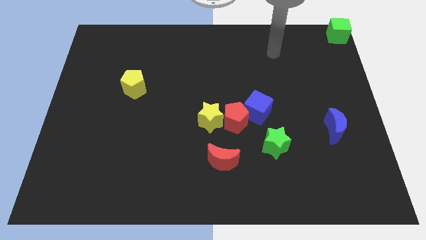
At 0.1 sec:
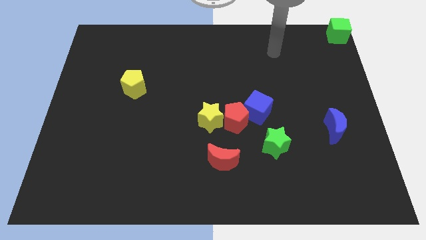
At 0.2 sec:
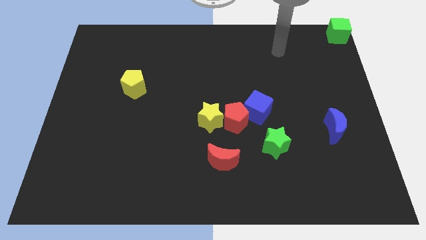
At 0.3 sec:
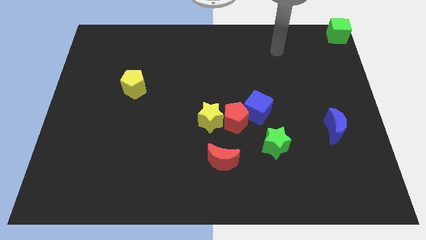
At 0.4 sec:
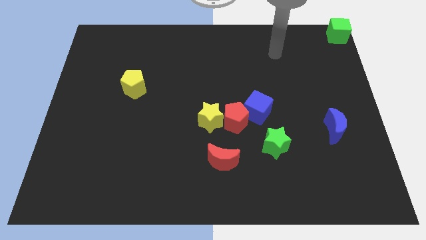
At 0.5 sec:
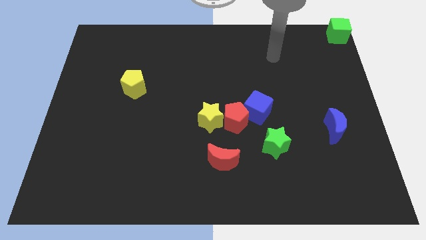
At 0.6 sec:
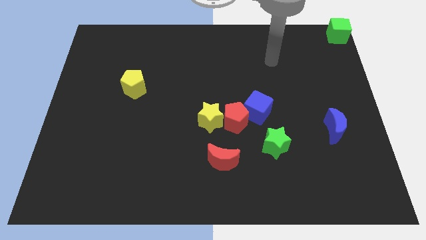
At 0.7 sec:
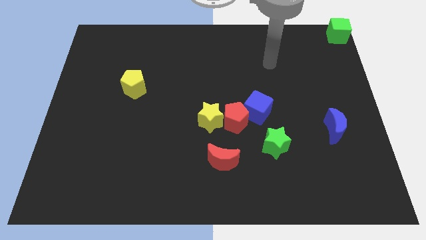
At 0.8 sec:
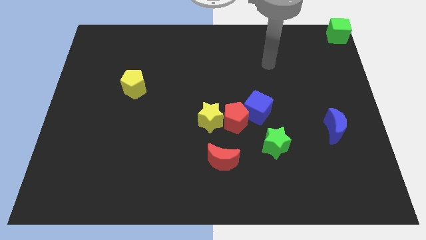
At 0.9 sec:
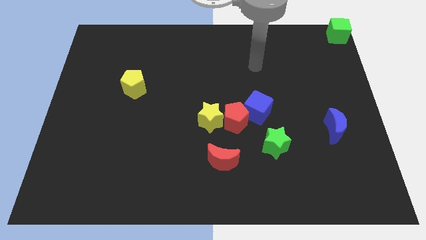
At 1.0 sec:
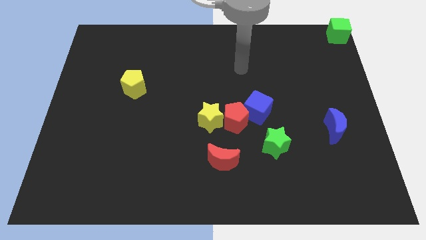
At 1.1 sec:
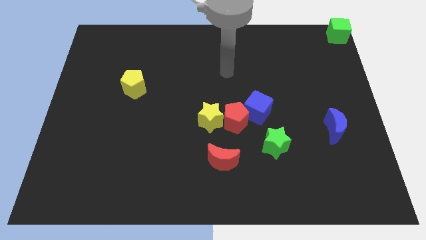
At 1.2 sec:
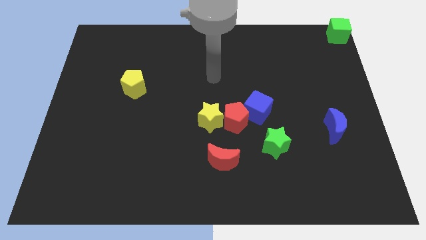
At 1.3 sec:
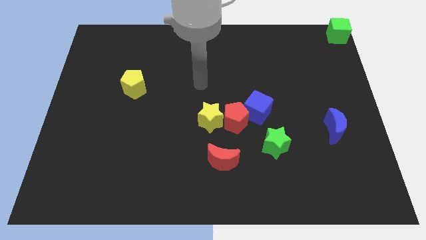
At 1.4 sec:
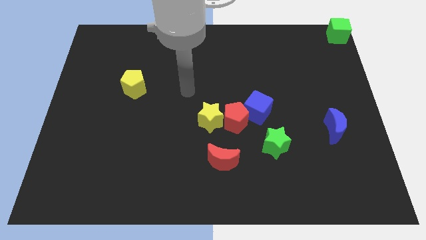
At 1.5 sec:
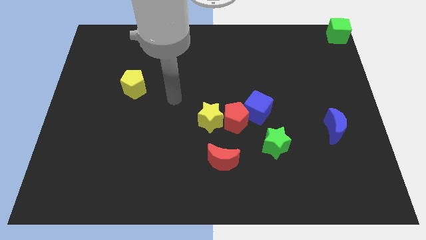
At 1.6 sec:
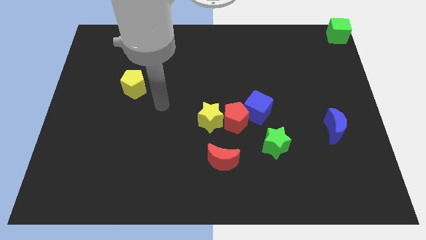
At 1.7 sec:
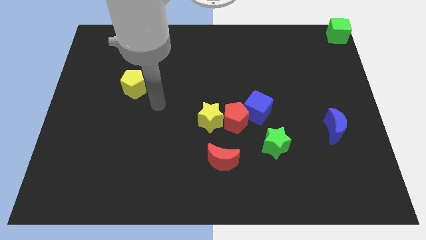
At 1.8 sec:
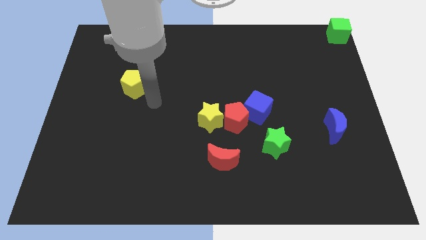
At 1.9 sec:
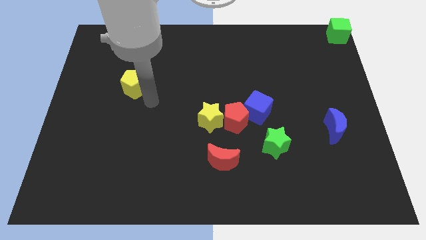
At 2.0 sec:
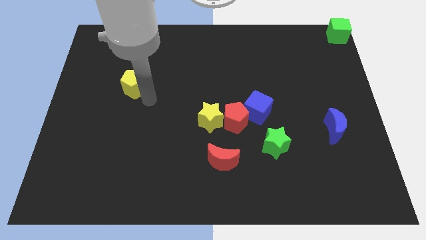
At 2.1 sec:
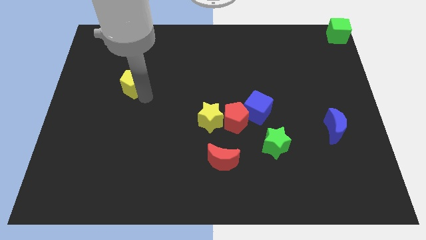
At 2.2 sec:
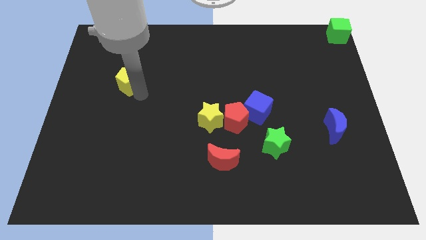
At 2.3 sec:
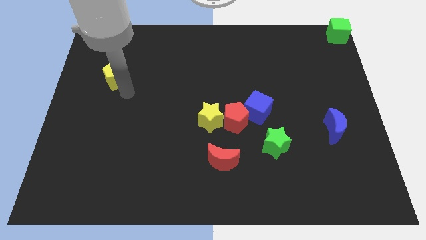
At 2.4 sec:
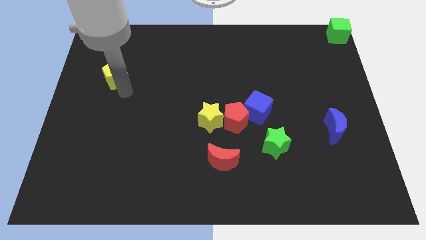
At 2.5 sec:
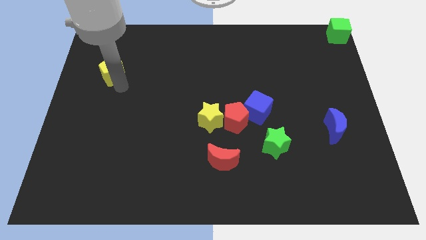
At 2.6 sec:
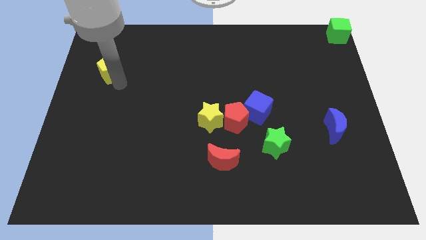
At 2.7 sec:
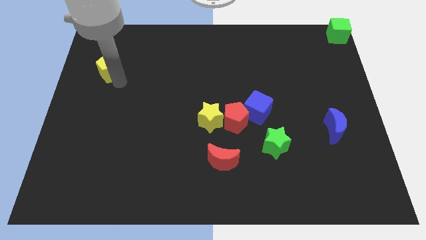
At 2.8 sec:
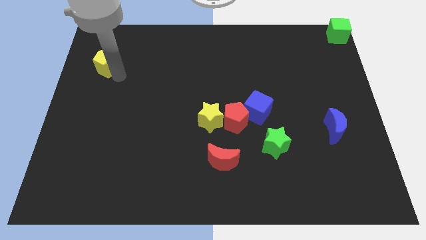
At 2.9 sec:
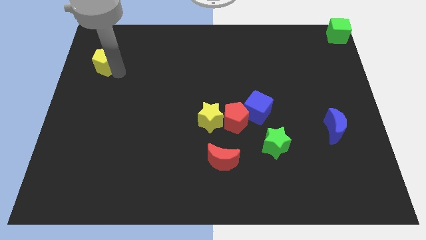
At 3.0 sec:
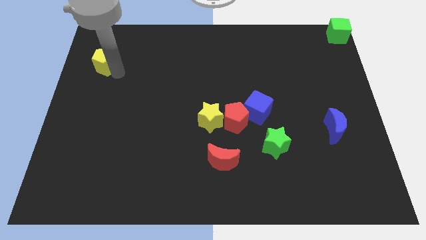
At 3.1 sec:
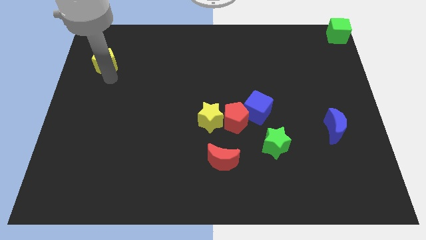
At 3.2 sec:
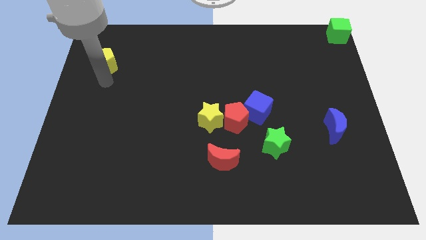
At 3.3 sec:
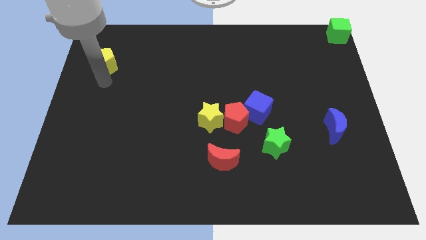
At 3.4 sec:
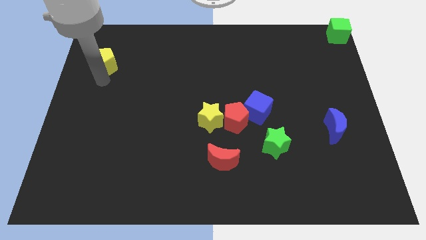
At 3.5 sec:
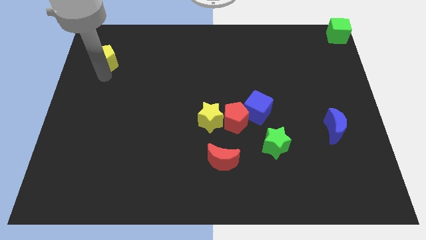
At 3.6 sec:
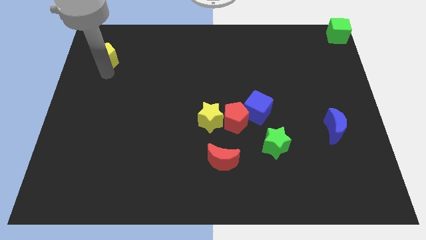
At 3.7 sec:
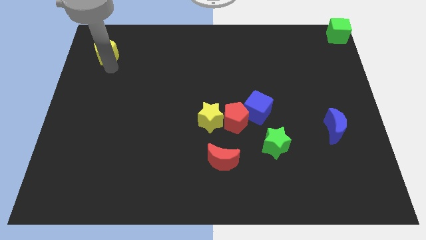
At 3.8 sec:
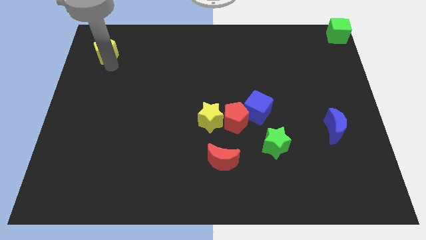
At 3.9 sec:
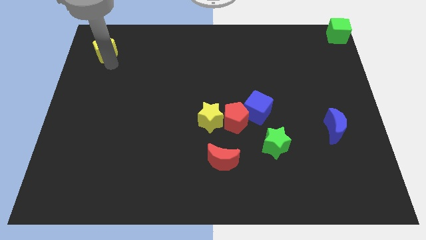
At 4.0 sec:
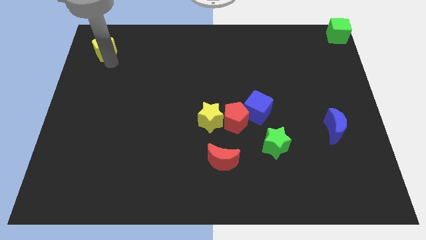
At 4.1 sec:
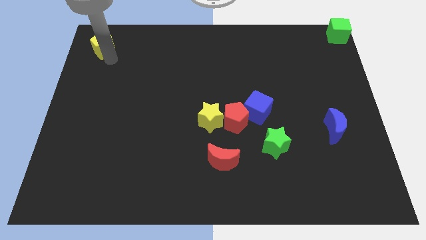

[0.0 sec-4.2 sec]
move the yellow pentagon to the top left of the board

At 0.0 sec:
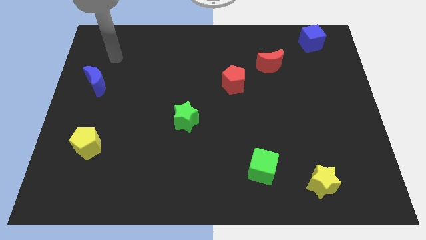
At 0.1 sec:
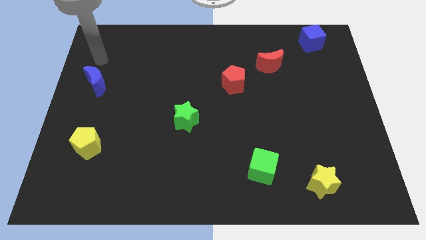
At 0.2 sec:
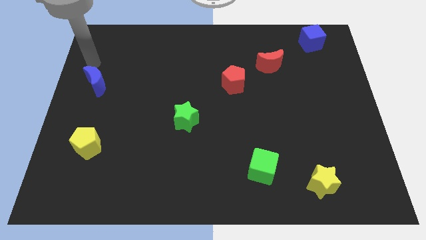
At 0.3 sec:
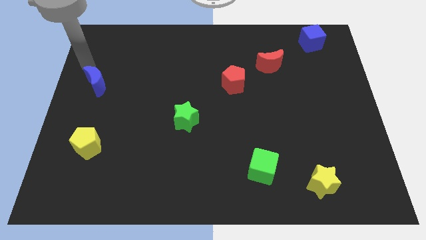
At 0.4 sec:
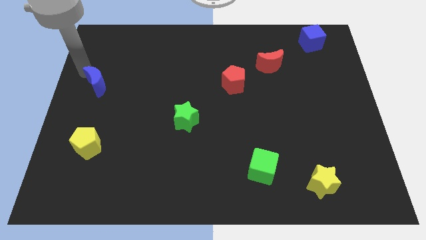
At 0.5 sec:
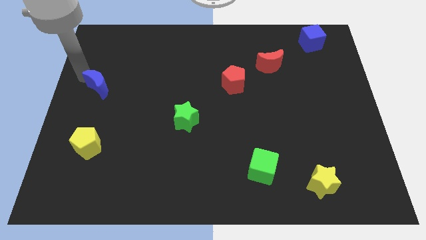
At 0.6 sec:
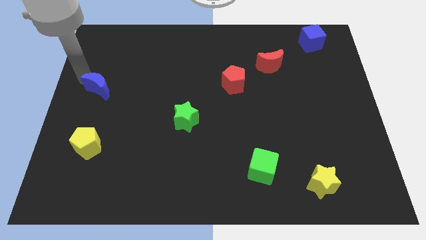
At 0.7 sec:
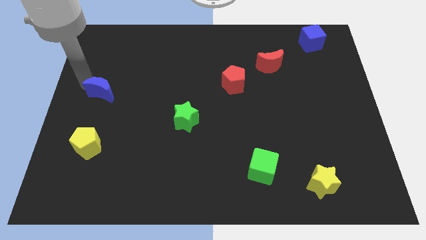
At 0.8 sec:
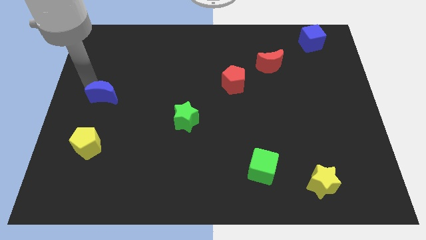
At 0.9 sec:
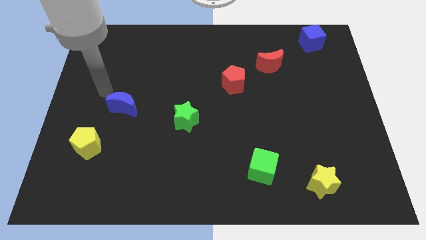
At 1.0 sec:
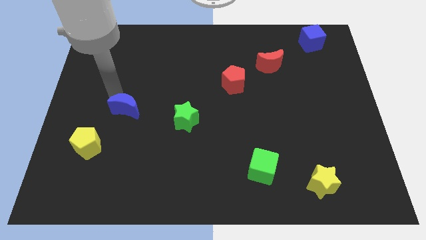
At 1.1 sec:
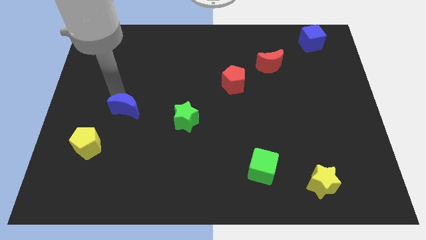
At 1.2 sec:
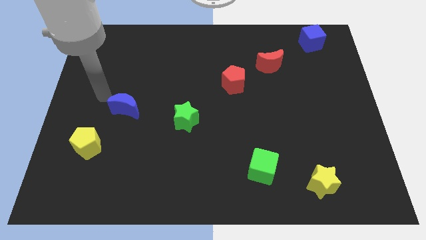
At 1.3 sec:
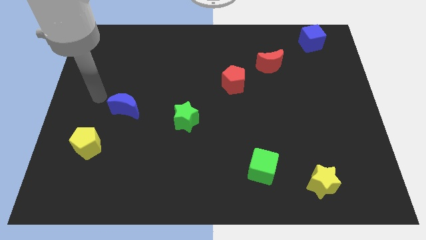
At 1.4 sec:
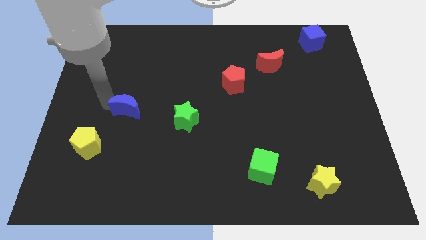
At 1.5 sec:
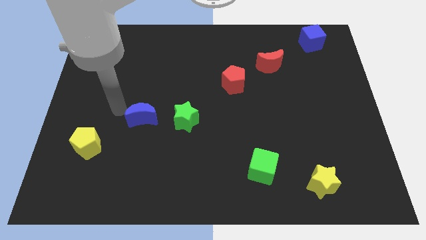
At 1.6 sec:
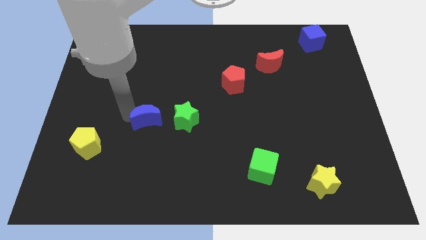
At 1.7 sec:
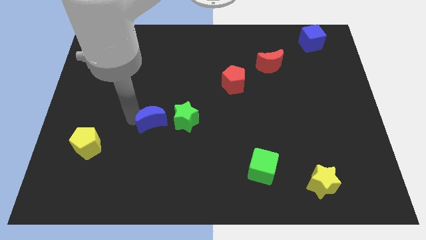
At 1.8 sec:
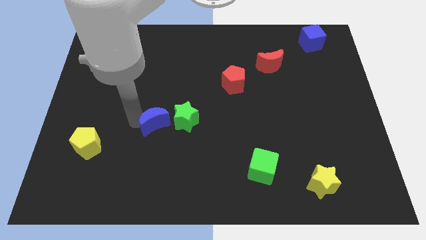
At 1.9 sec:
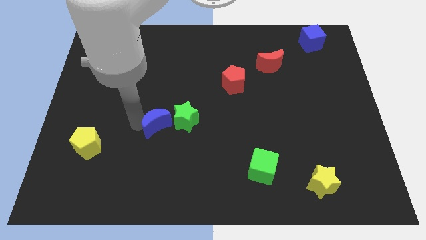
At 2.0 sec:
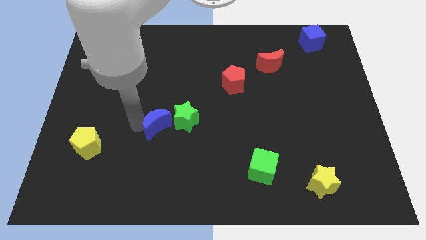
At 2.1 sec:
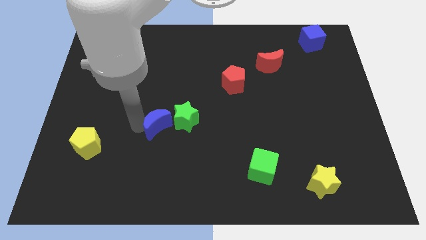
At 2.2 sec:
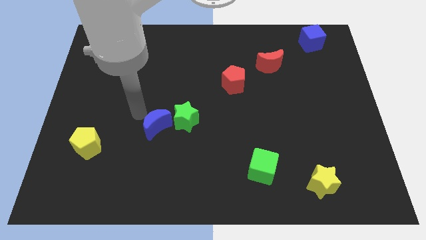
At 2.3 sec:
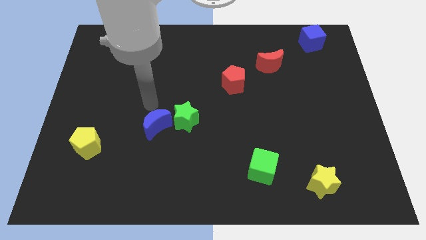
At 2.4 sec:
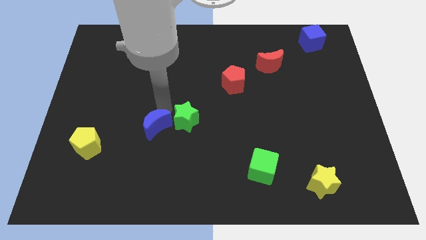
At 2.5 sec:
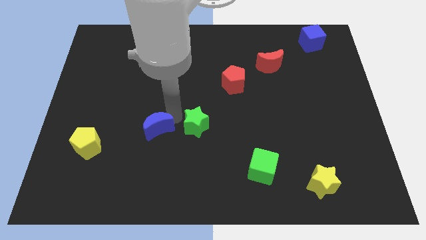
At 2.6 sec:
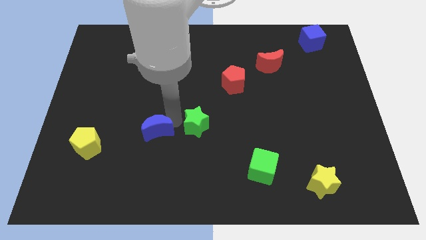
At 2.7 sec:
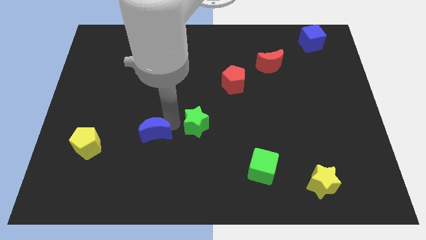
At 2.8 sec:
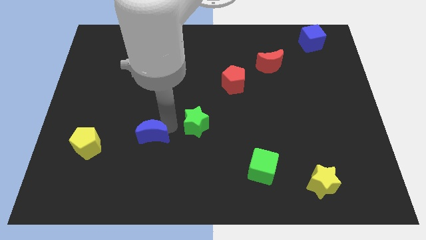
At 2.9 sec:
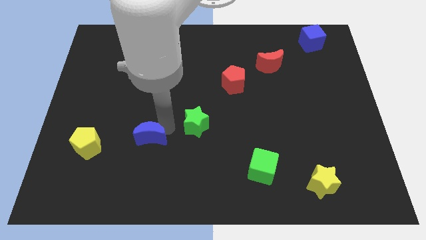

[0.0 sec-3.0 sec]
move the blue moon in between the yellow pentagon and the green star

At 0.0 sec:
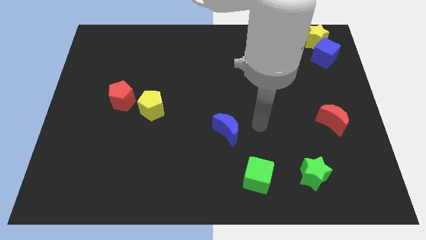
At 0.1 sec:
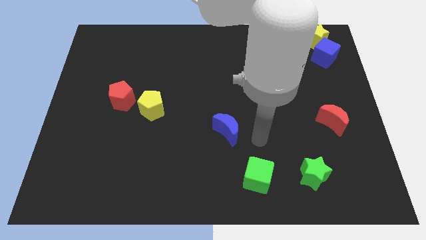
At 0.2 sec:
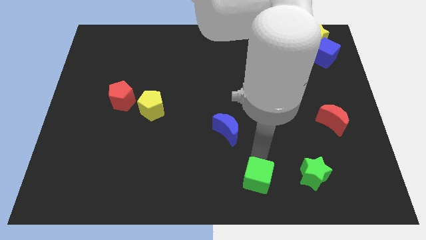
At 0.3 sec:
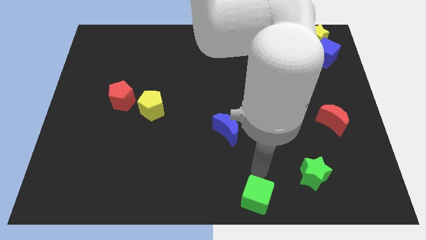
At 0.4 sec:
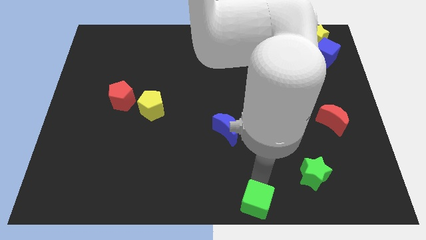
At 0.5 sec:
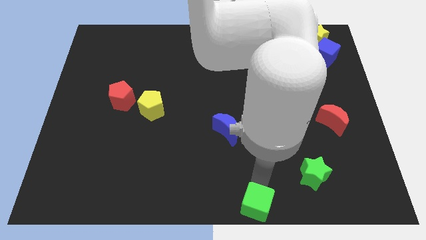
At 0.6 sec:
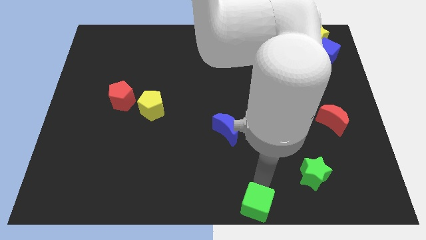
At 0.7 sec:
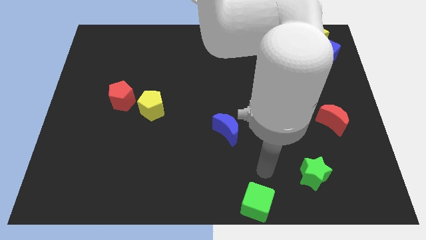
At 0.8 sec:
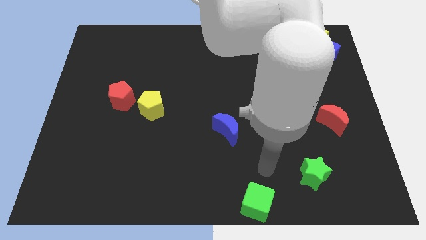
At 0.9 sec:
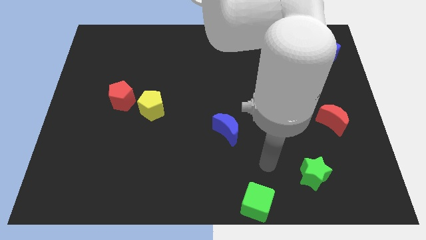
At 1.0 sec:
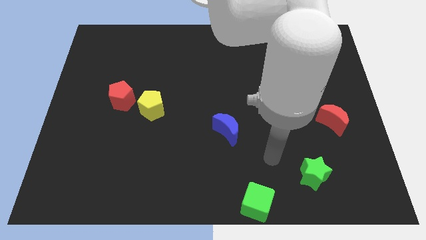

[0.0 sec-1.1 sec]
slide green cube towards bottom

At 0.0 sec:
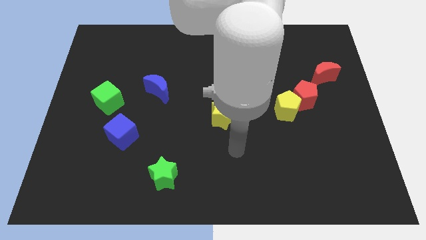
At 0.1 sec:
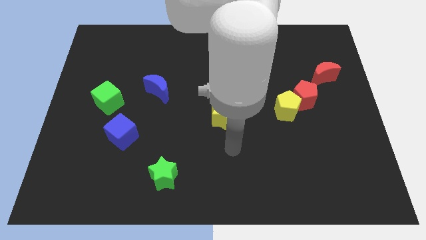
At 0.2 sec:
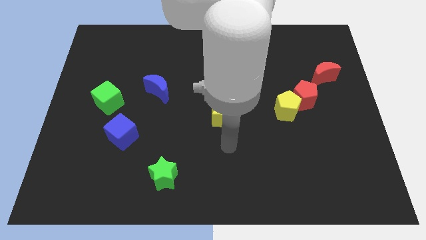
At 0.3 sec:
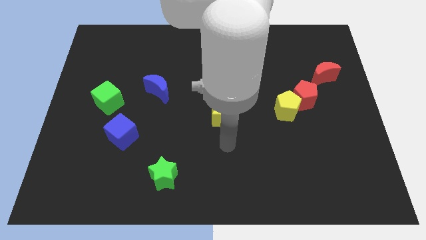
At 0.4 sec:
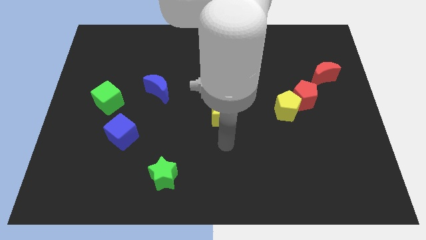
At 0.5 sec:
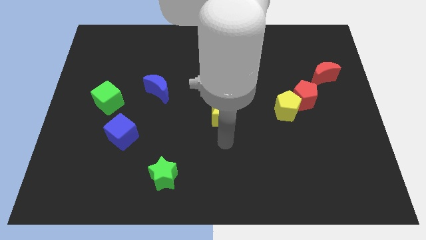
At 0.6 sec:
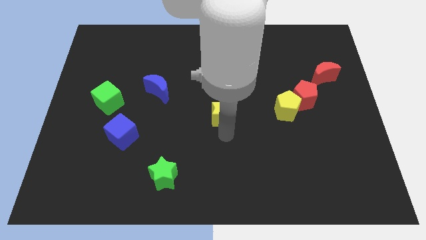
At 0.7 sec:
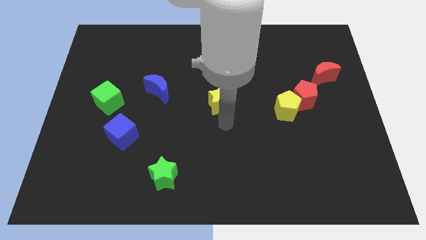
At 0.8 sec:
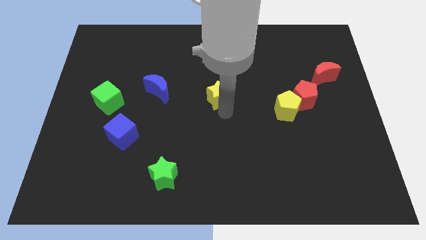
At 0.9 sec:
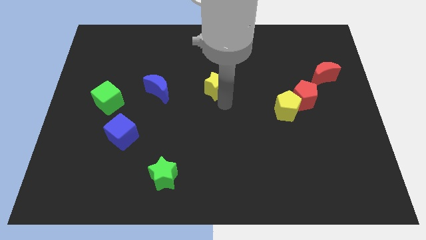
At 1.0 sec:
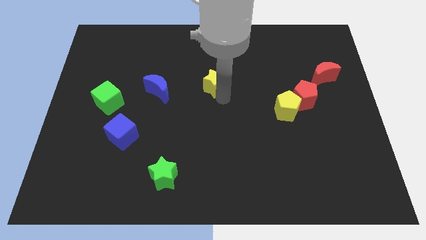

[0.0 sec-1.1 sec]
move yellow star towards its top
